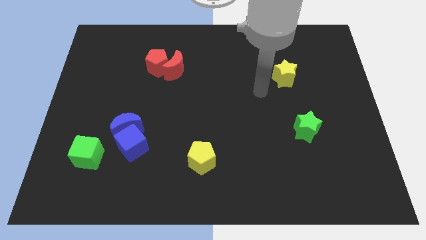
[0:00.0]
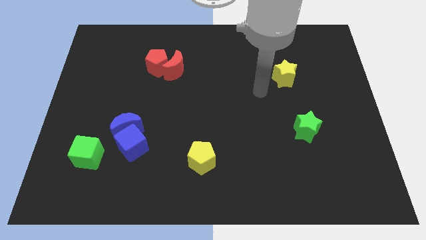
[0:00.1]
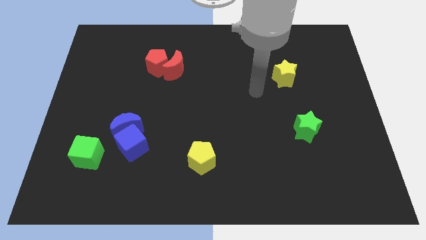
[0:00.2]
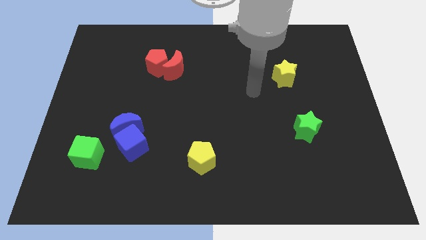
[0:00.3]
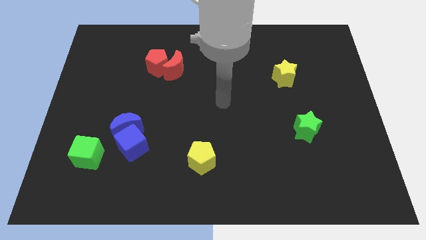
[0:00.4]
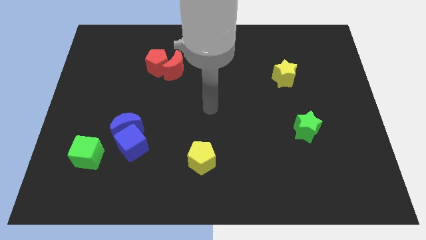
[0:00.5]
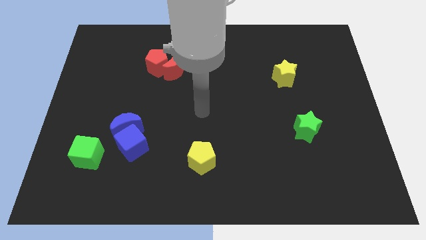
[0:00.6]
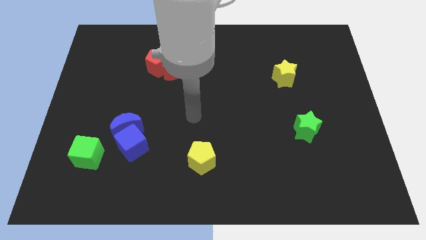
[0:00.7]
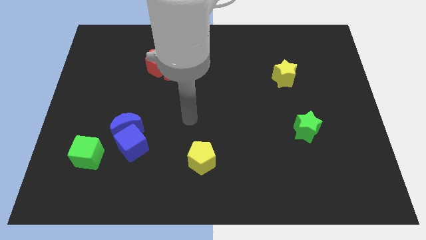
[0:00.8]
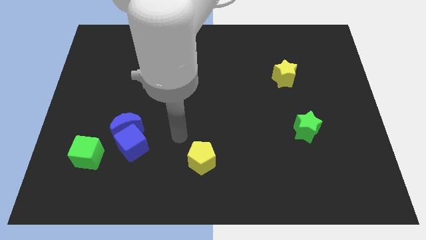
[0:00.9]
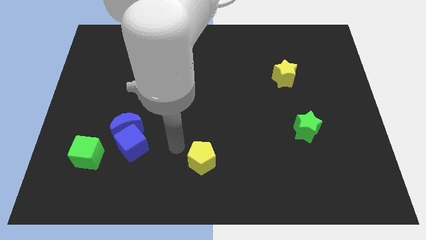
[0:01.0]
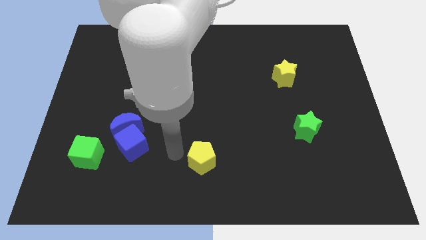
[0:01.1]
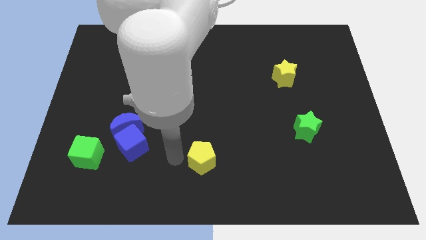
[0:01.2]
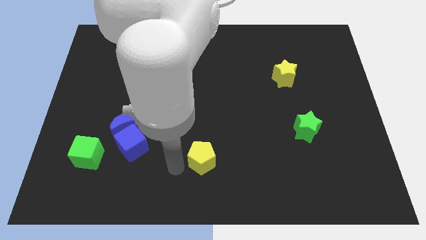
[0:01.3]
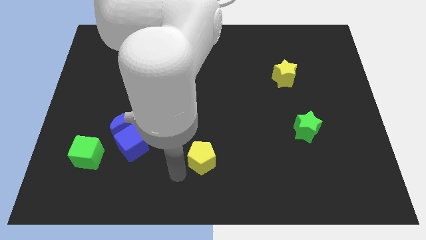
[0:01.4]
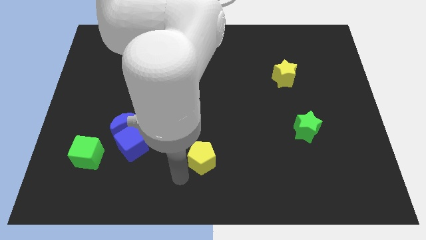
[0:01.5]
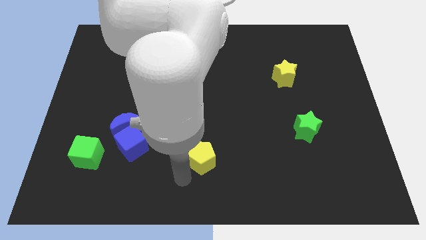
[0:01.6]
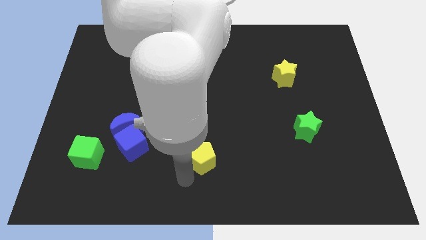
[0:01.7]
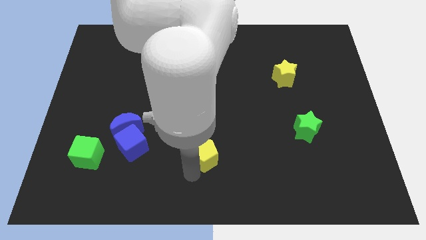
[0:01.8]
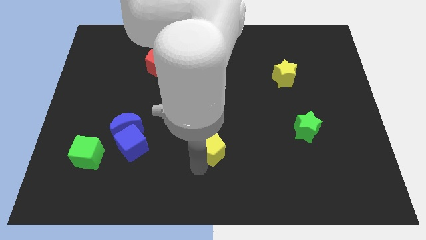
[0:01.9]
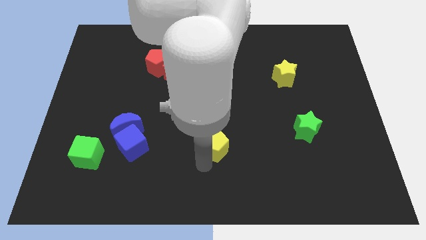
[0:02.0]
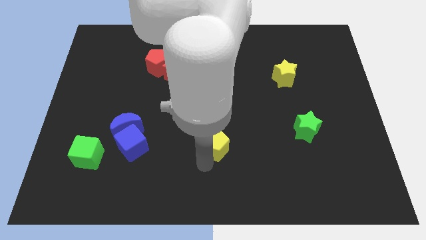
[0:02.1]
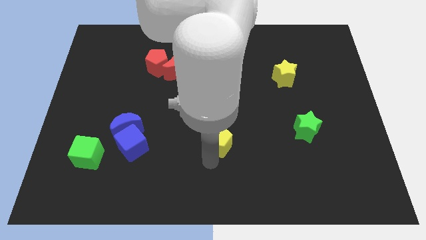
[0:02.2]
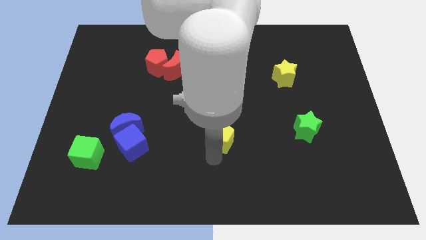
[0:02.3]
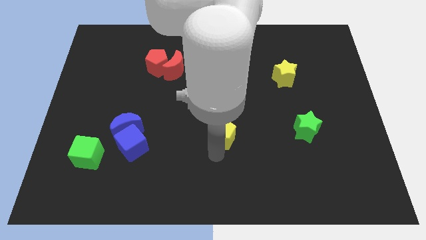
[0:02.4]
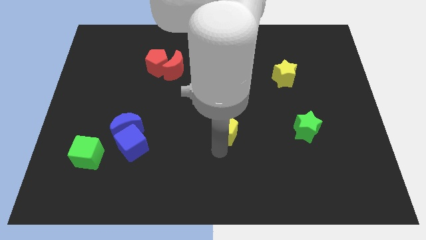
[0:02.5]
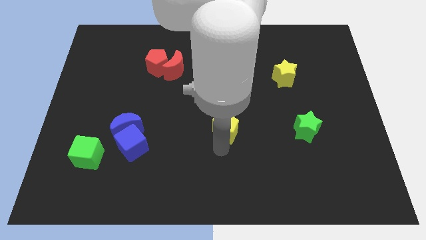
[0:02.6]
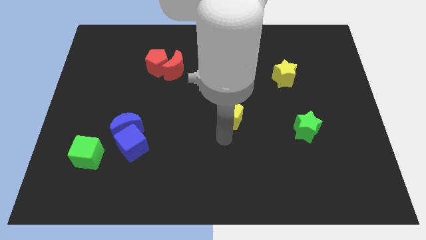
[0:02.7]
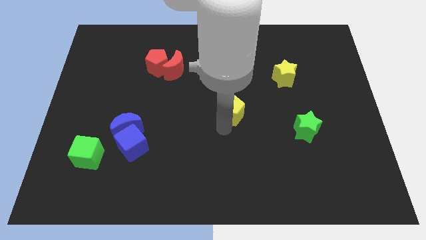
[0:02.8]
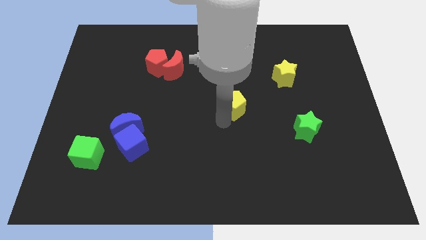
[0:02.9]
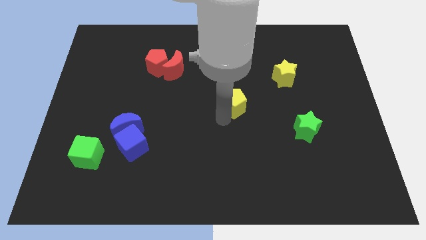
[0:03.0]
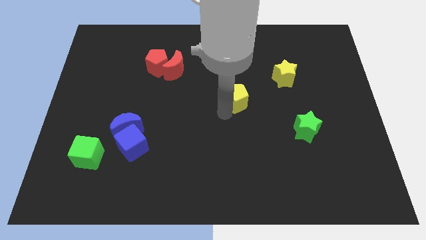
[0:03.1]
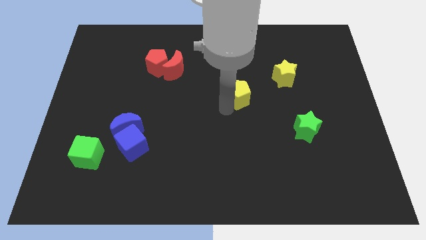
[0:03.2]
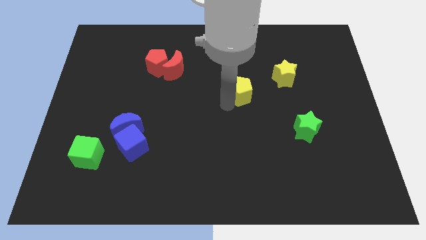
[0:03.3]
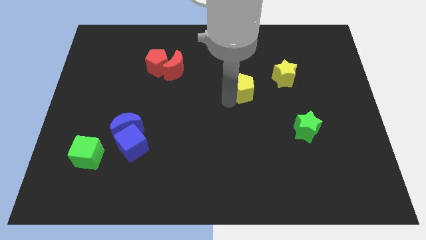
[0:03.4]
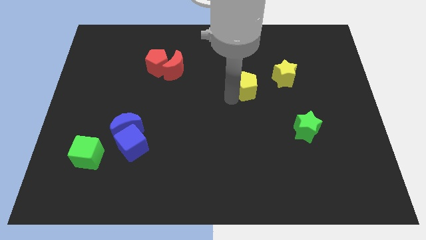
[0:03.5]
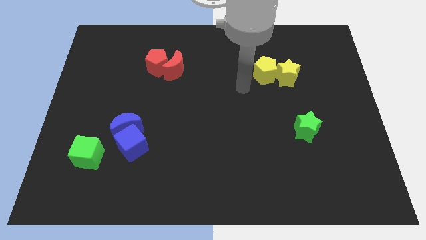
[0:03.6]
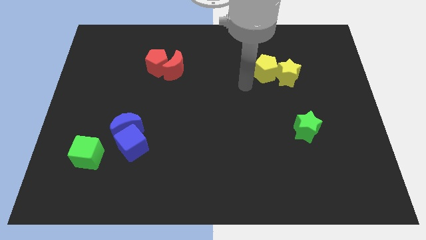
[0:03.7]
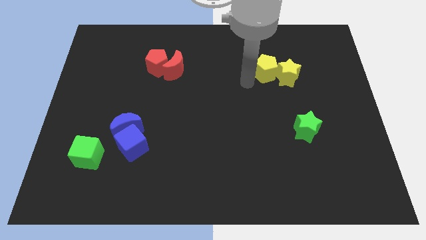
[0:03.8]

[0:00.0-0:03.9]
move the yellow pentagon close to the yellow star

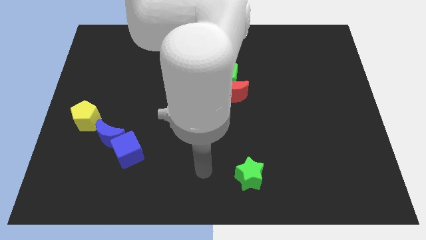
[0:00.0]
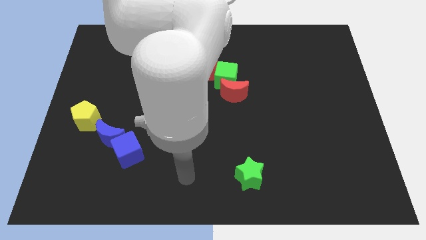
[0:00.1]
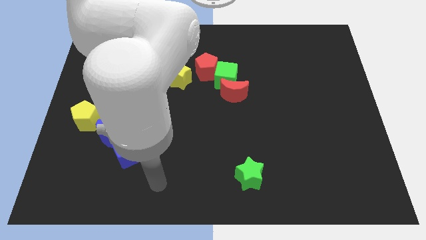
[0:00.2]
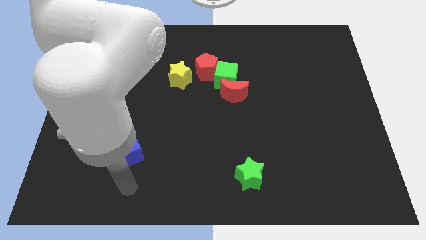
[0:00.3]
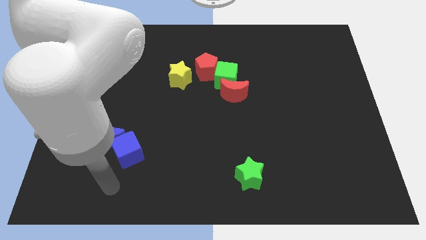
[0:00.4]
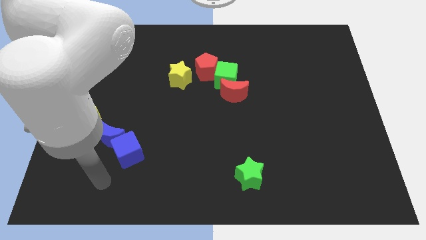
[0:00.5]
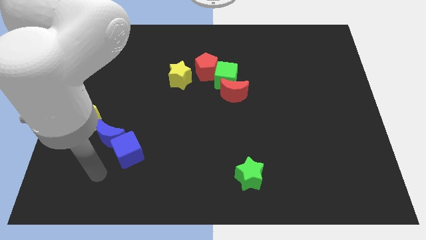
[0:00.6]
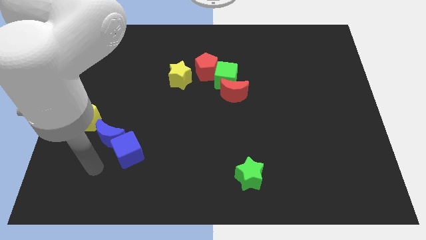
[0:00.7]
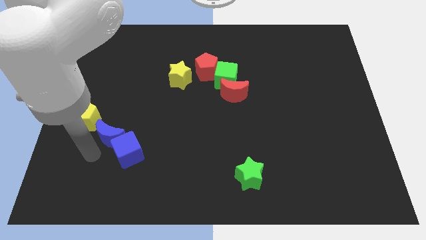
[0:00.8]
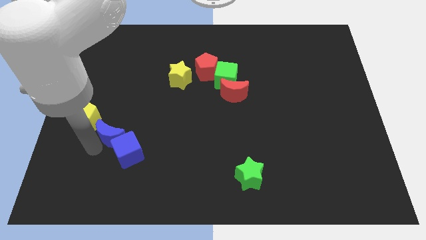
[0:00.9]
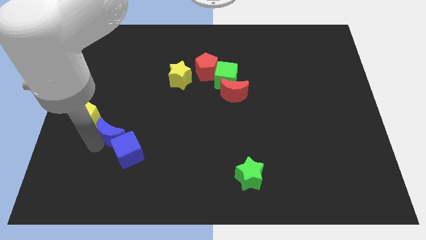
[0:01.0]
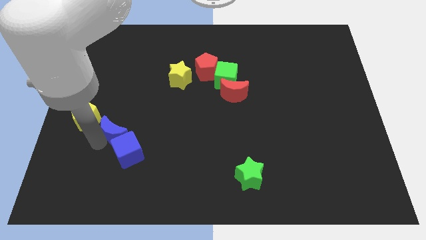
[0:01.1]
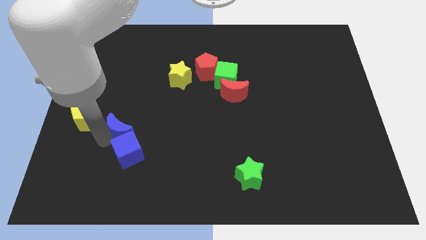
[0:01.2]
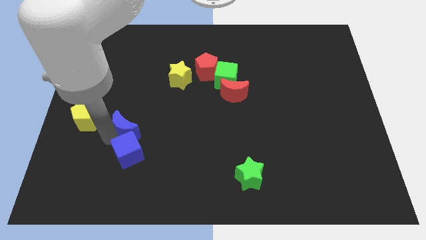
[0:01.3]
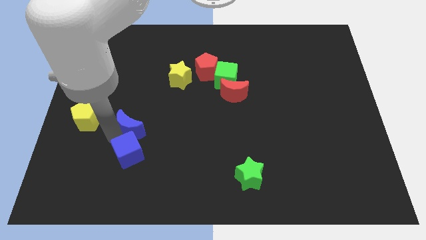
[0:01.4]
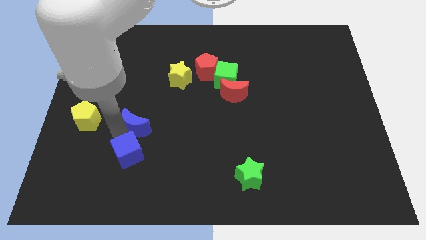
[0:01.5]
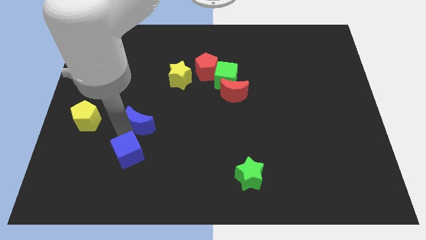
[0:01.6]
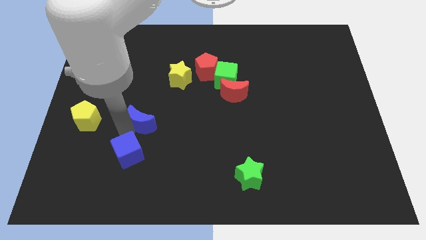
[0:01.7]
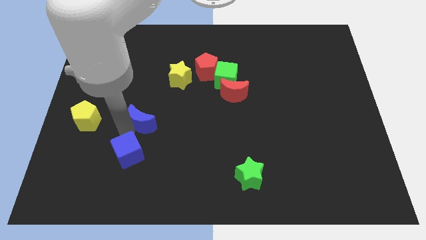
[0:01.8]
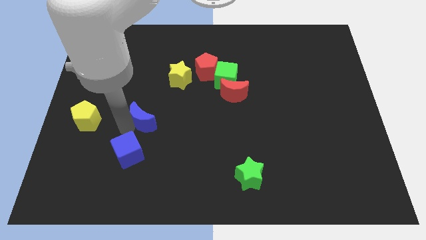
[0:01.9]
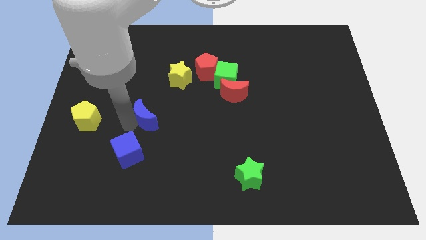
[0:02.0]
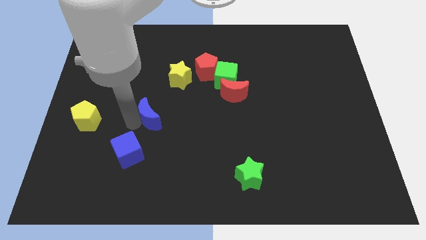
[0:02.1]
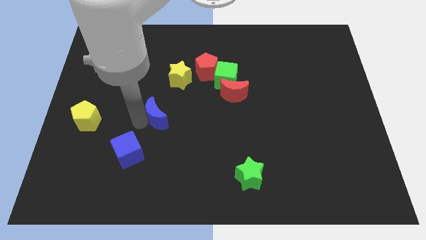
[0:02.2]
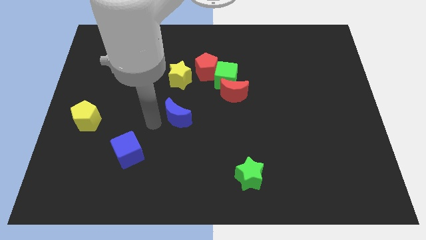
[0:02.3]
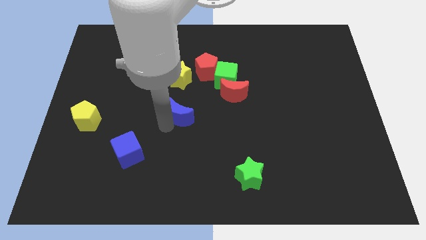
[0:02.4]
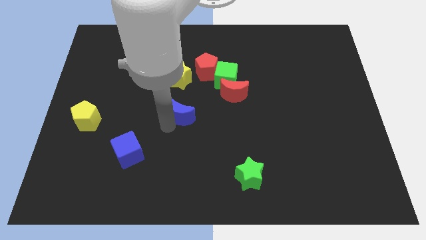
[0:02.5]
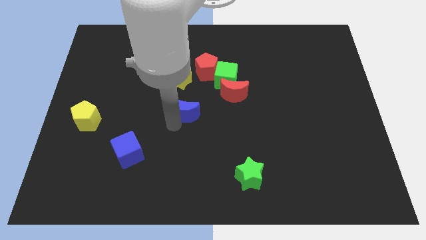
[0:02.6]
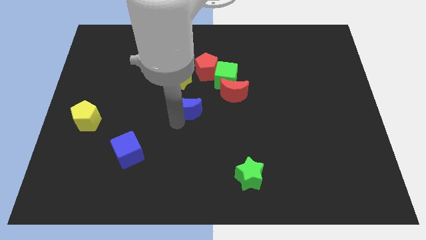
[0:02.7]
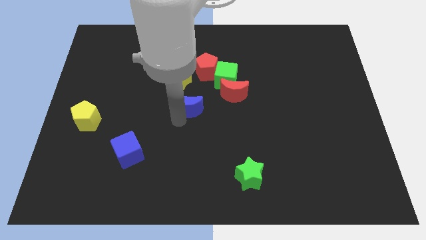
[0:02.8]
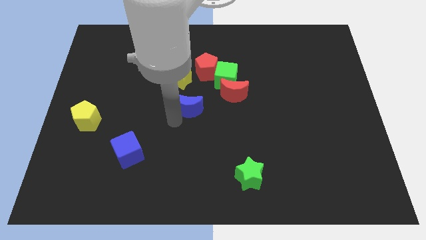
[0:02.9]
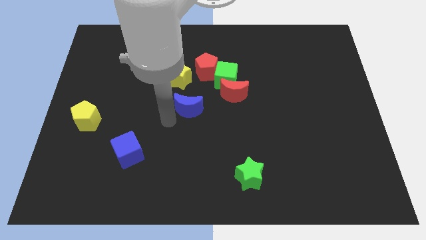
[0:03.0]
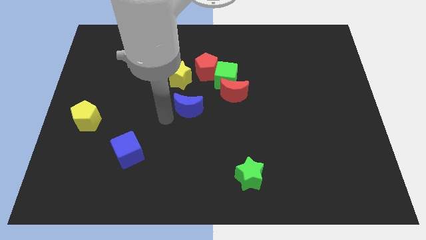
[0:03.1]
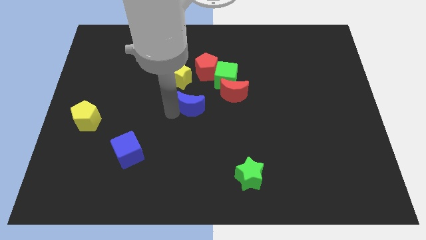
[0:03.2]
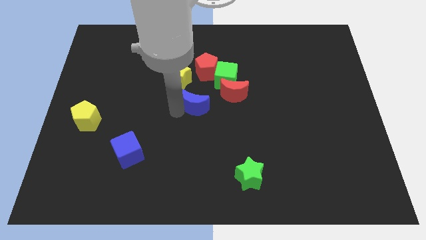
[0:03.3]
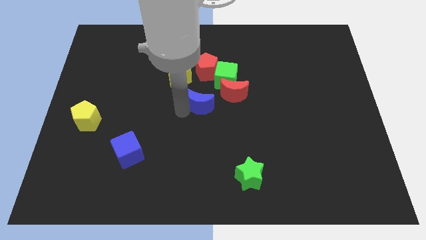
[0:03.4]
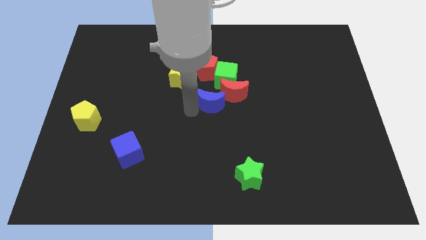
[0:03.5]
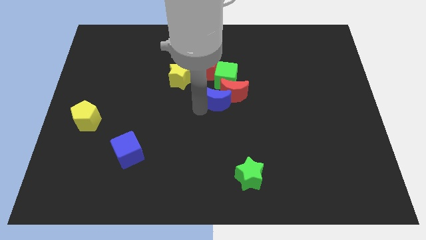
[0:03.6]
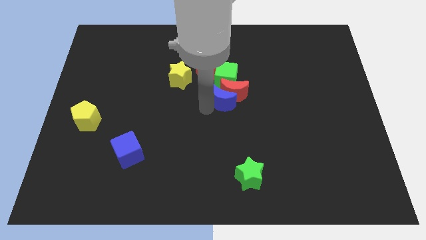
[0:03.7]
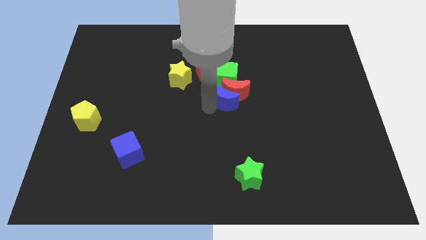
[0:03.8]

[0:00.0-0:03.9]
slide the blue moon close to the red moon

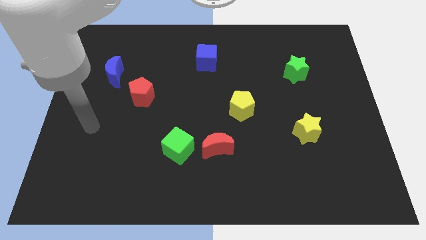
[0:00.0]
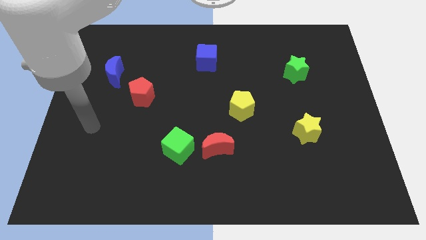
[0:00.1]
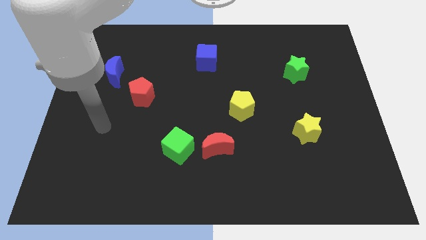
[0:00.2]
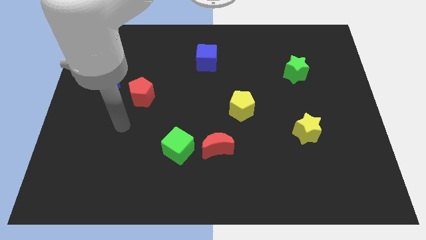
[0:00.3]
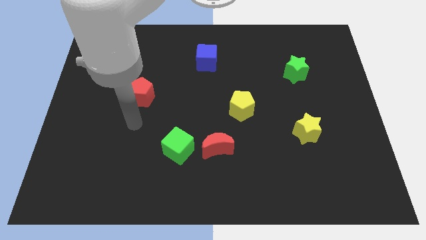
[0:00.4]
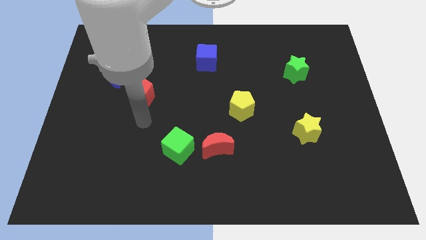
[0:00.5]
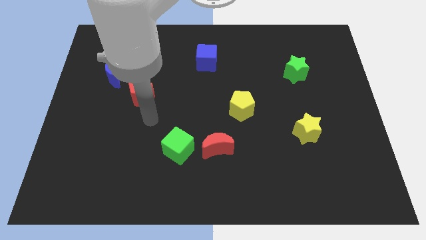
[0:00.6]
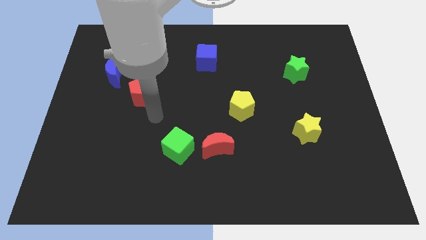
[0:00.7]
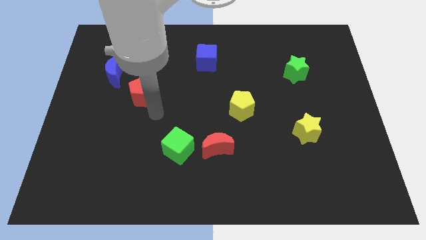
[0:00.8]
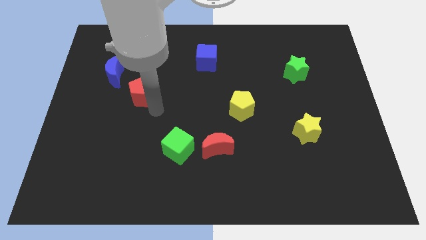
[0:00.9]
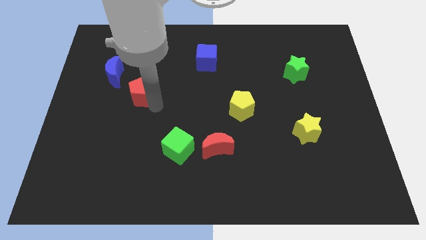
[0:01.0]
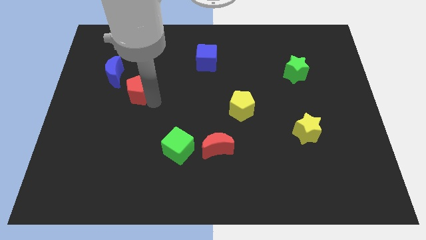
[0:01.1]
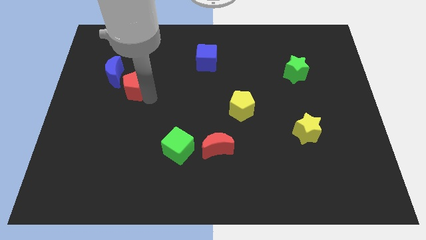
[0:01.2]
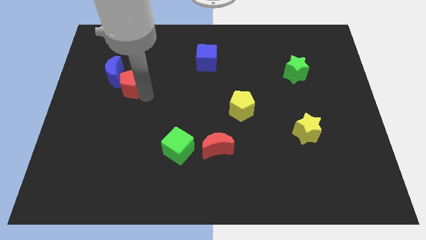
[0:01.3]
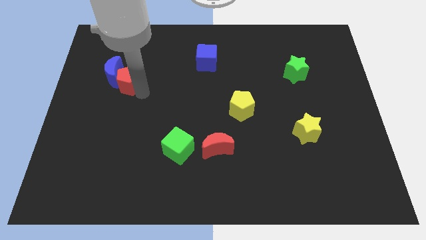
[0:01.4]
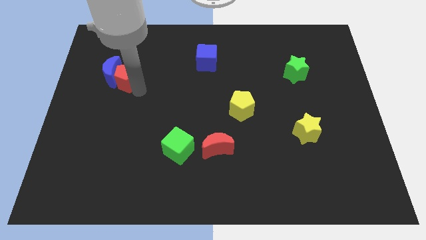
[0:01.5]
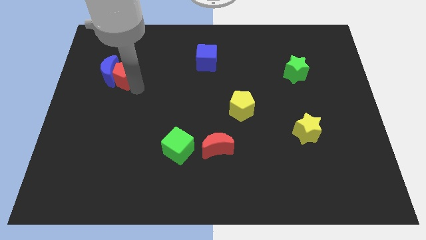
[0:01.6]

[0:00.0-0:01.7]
put the red pentagon close to the blue moon
